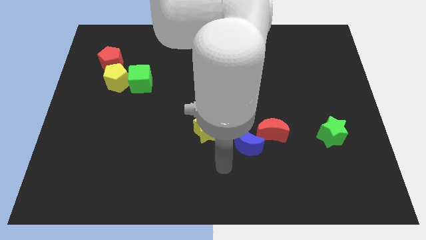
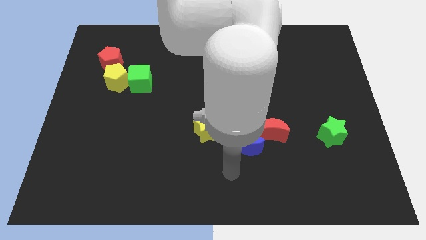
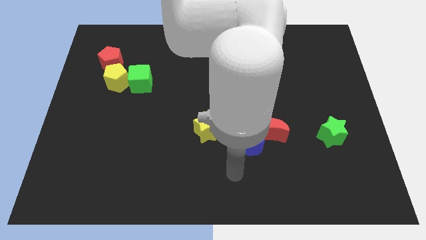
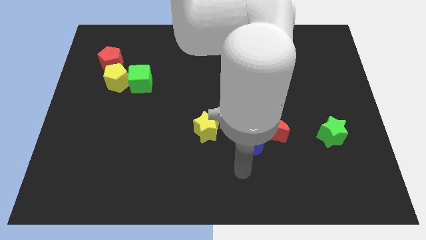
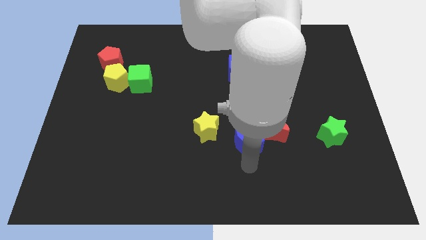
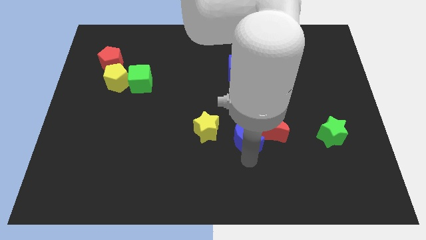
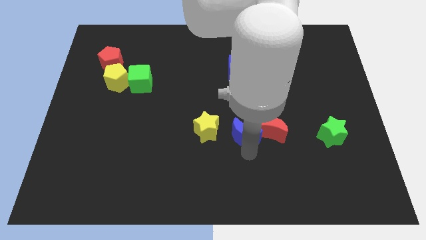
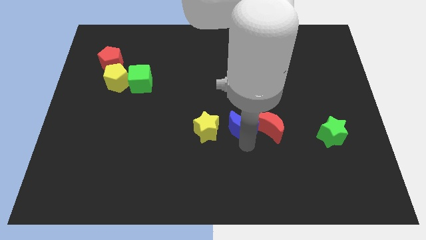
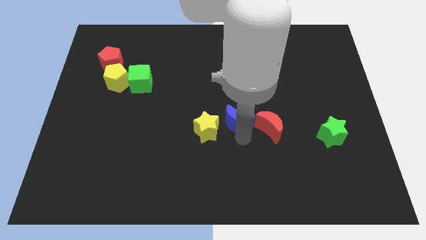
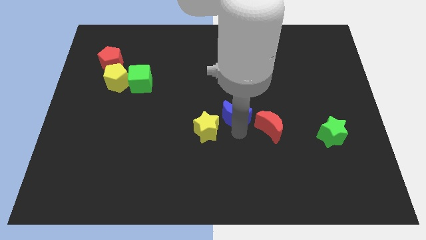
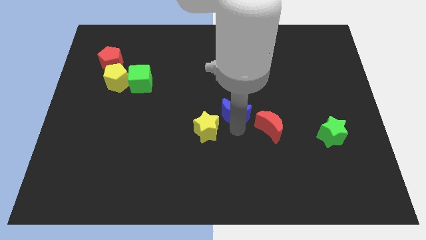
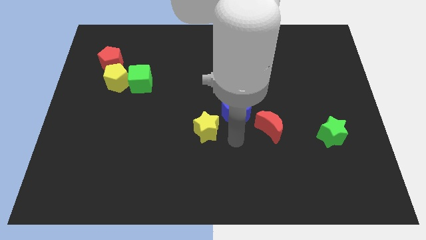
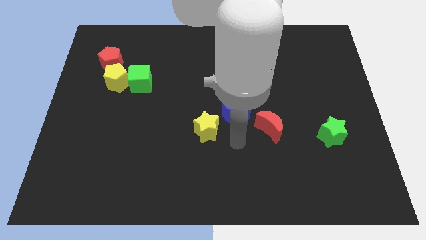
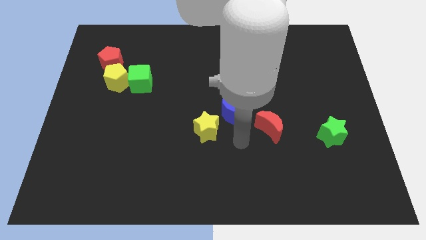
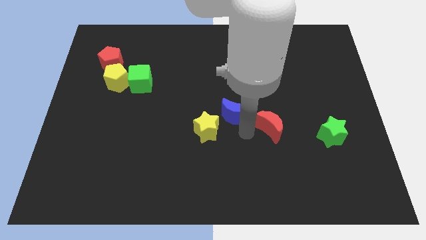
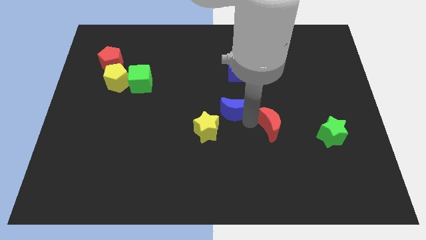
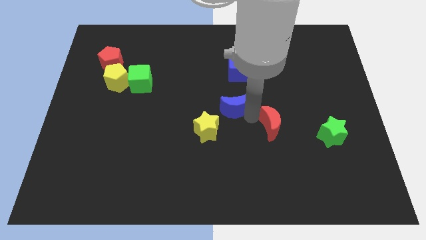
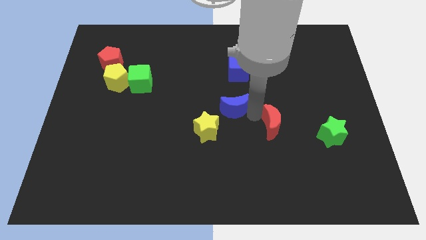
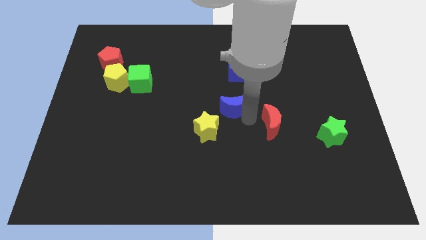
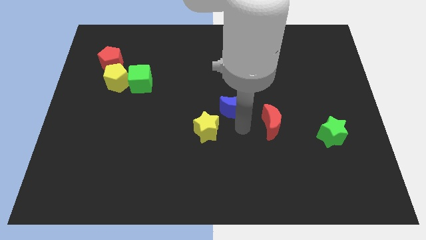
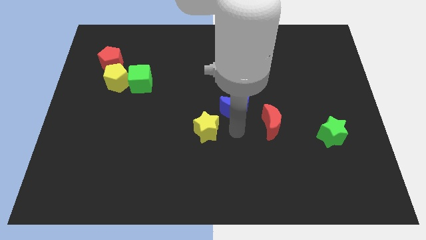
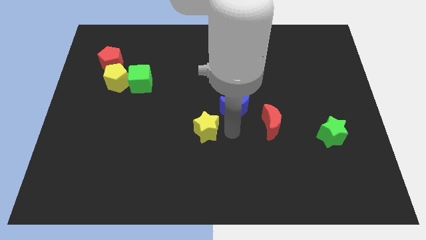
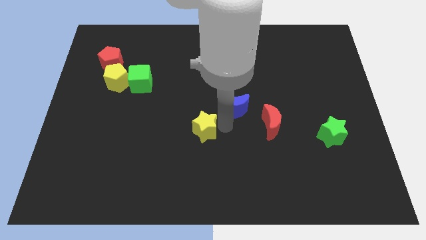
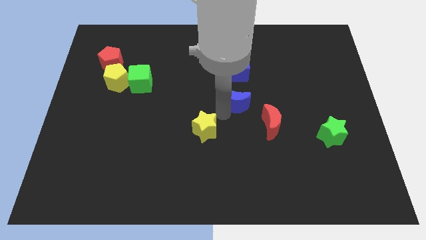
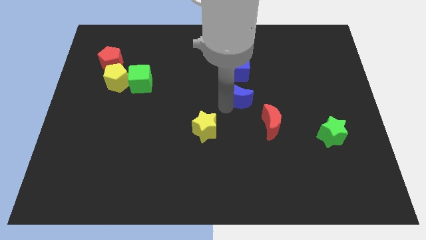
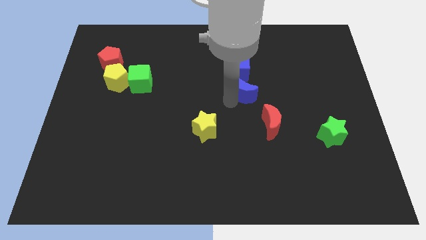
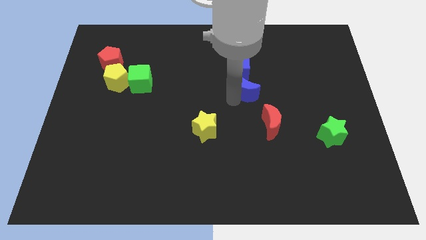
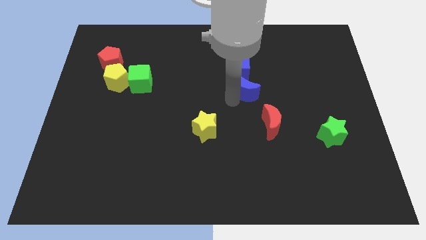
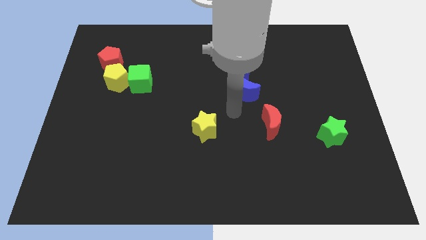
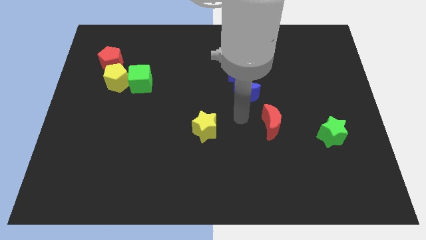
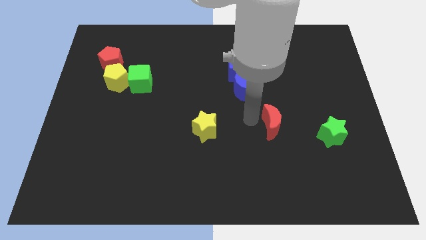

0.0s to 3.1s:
separate blue moon from red moon

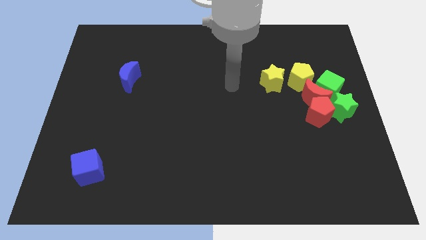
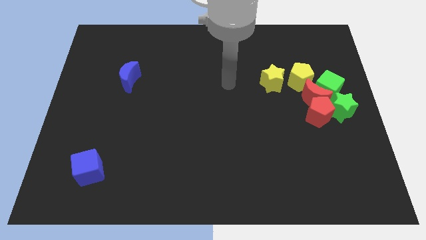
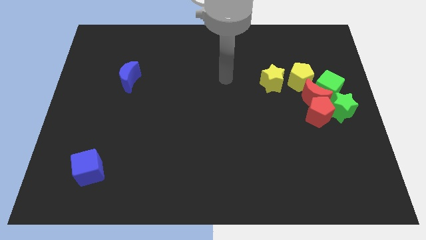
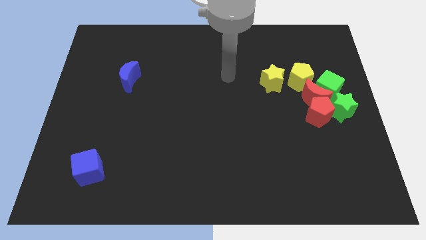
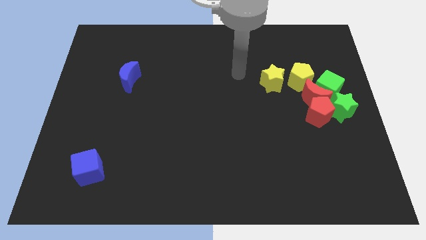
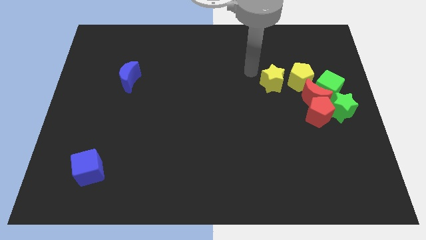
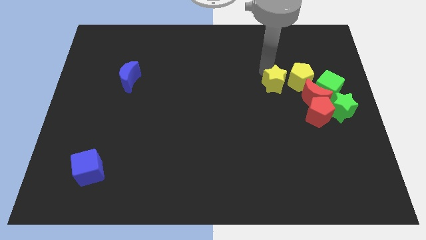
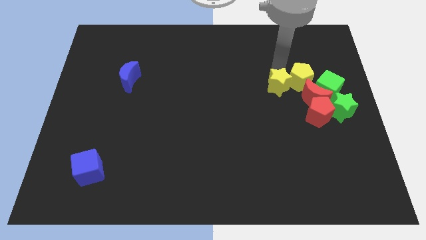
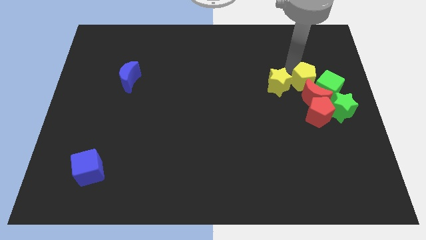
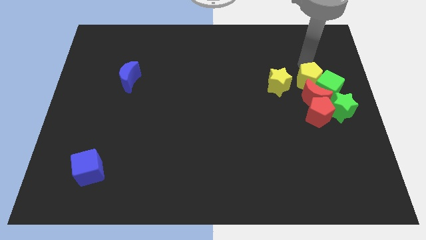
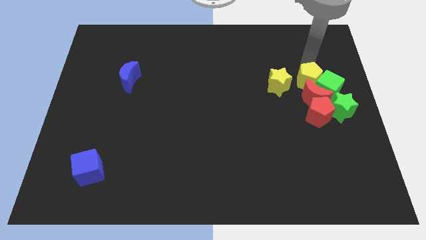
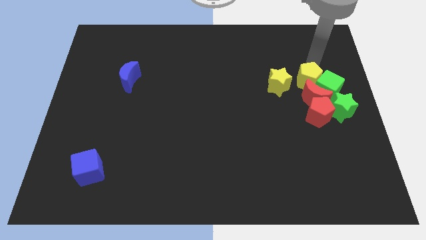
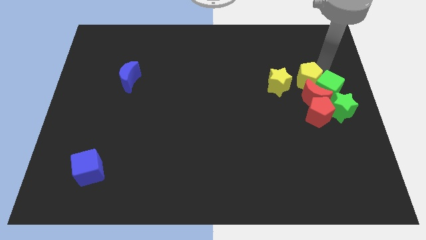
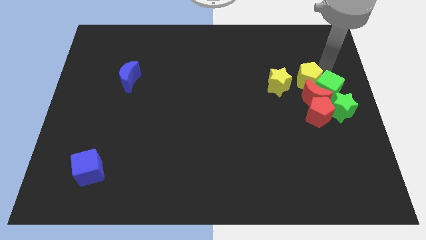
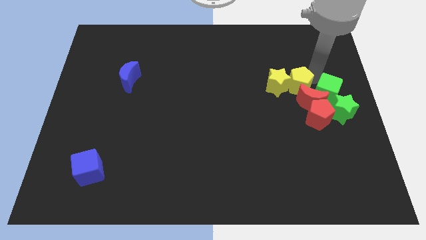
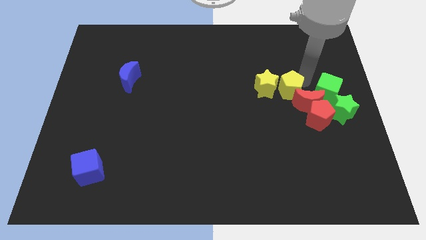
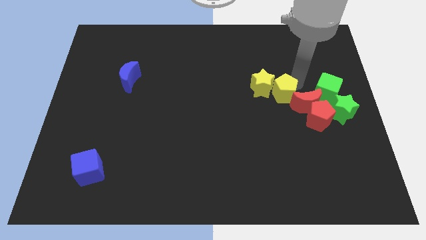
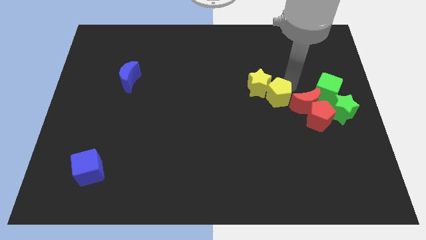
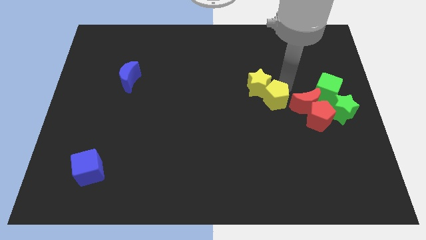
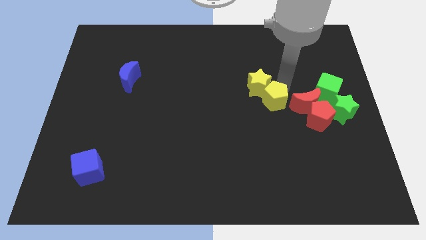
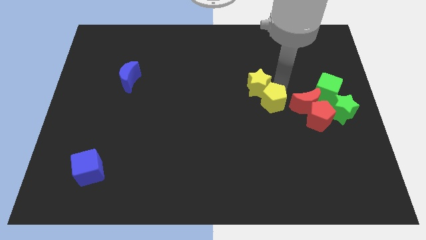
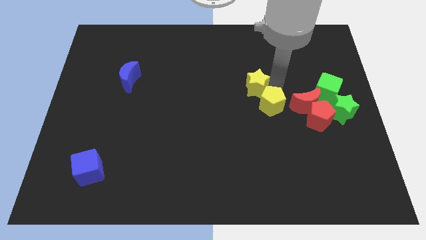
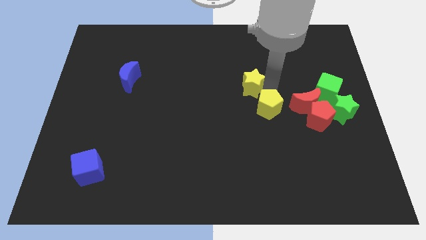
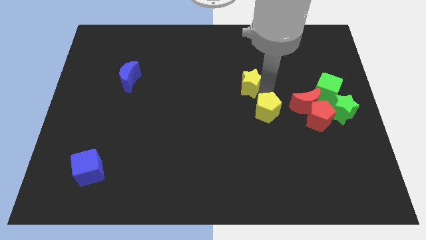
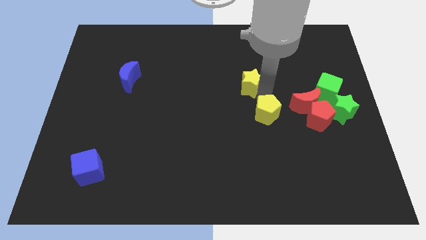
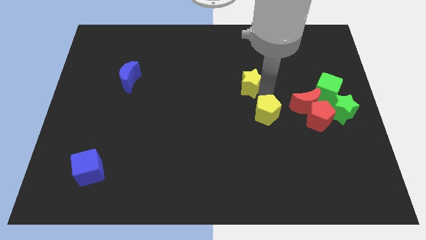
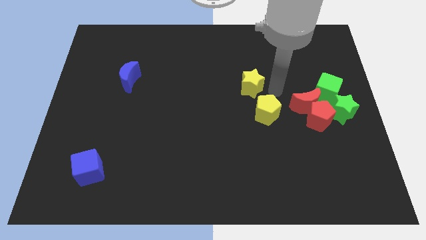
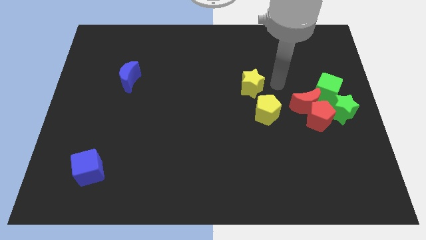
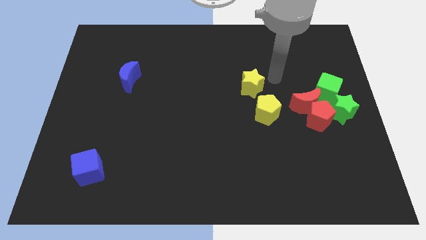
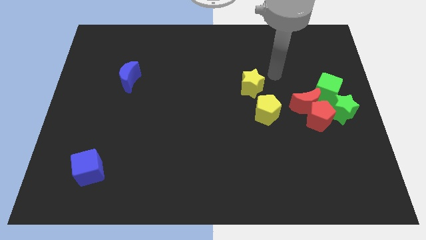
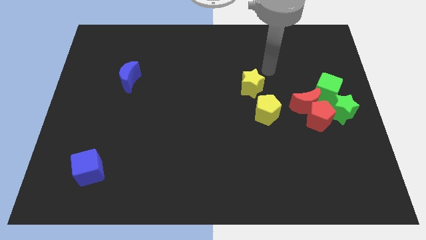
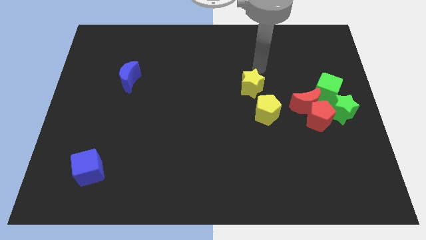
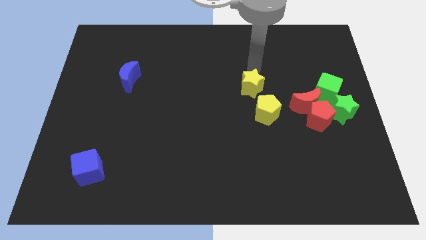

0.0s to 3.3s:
push the yellow pentagon to the bottom right of the yellow star

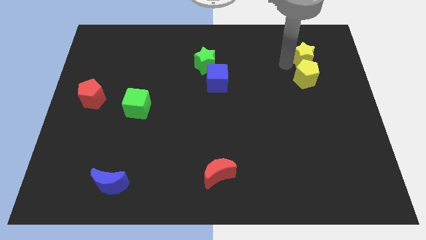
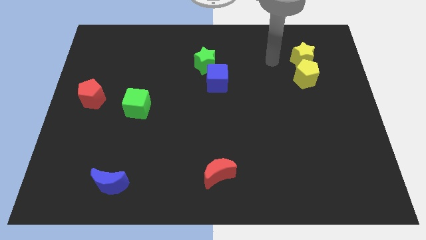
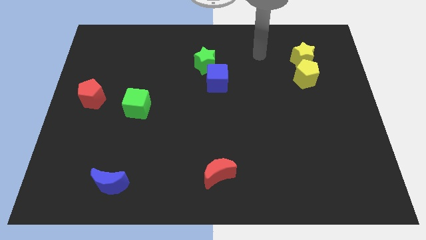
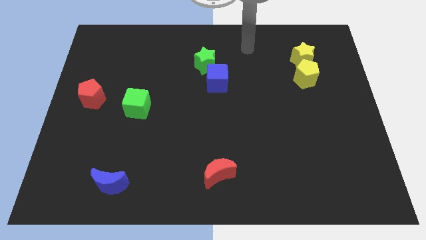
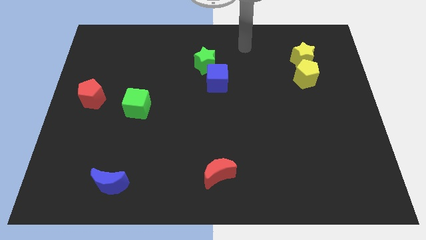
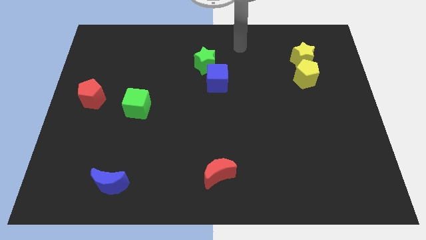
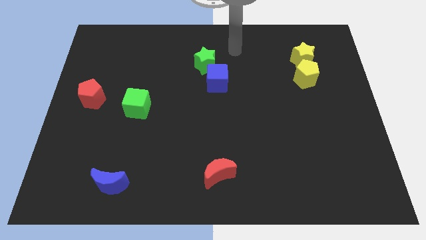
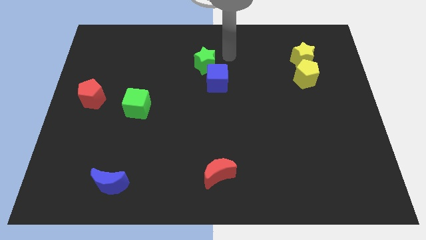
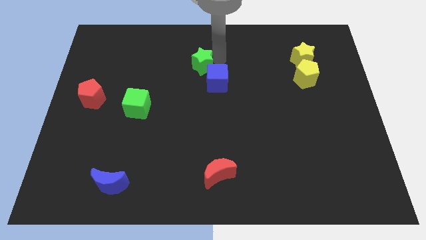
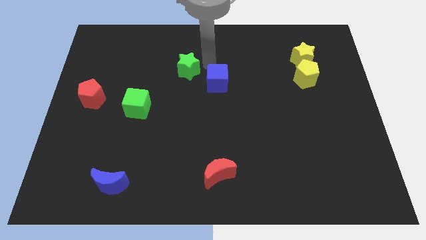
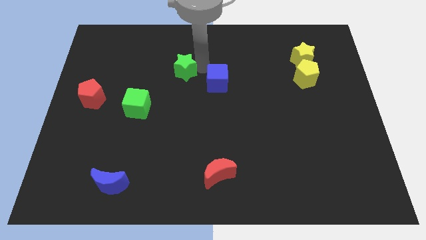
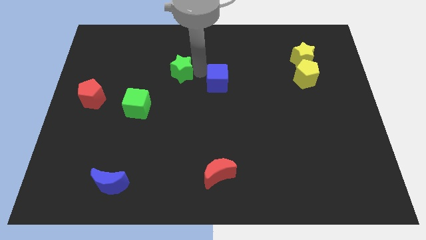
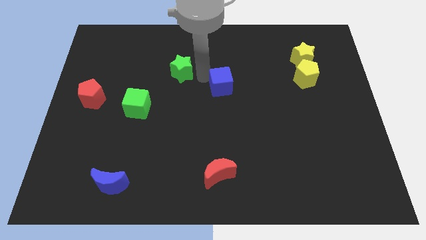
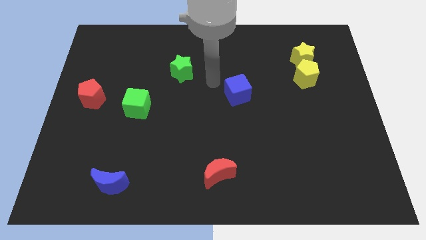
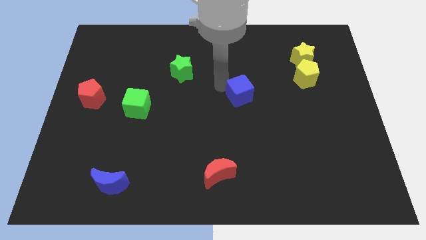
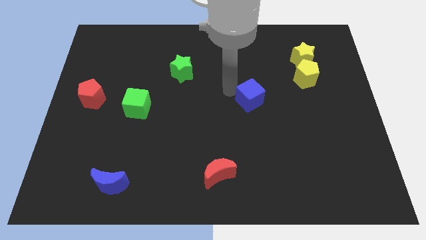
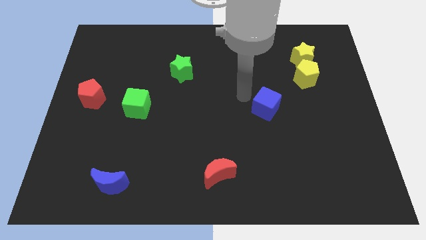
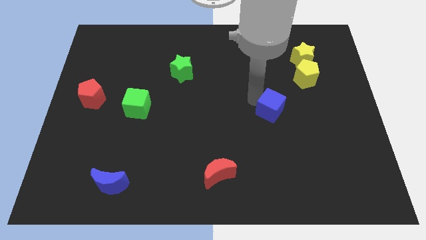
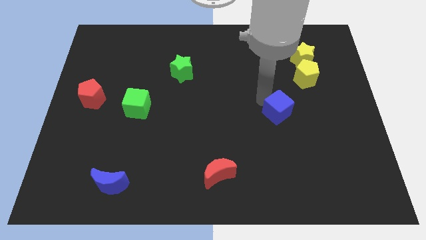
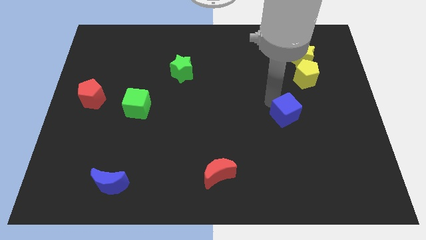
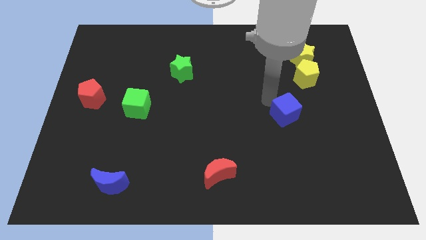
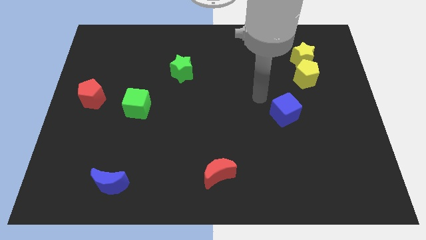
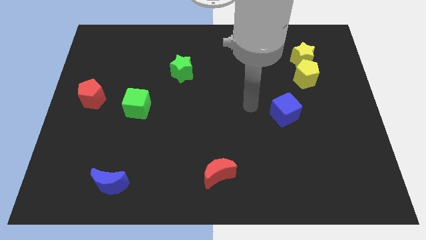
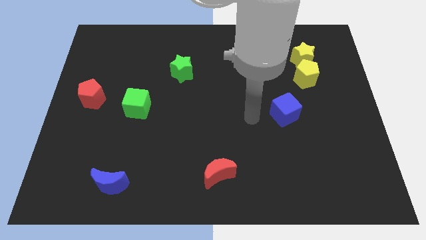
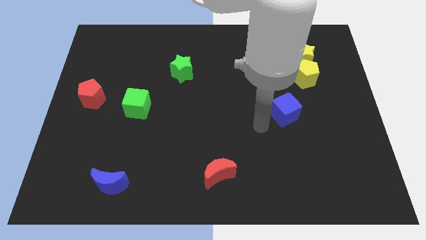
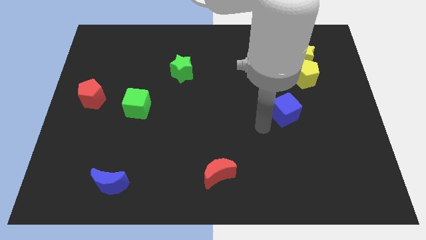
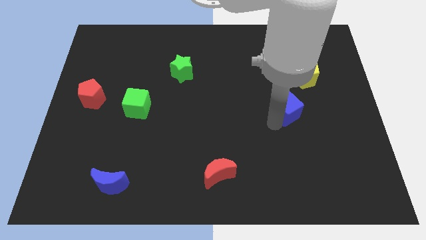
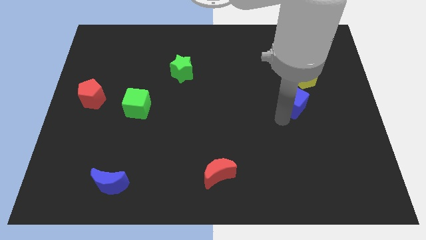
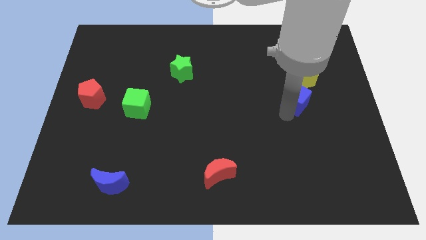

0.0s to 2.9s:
move your arm away from the yellow star
